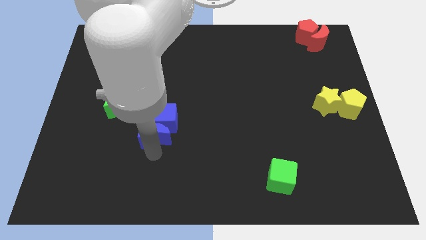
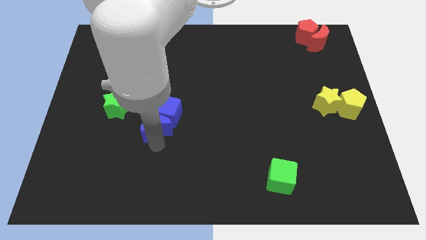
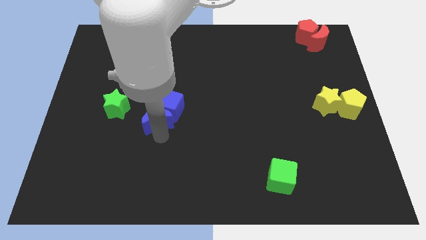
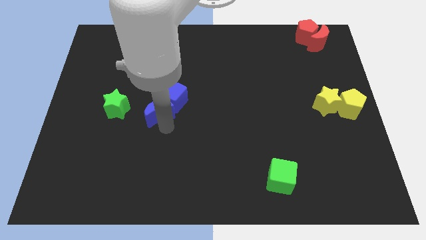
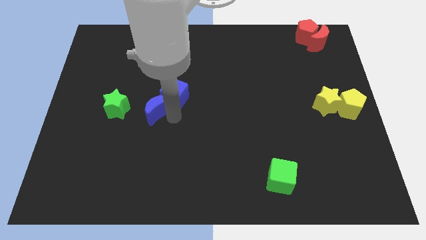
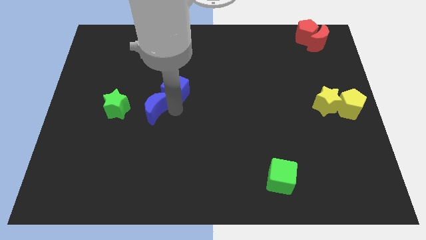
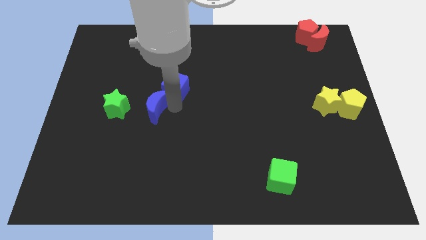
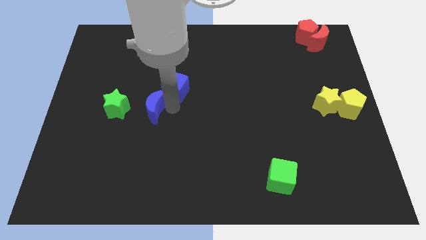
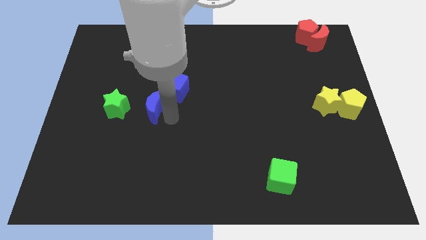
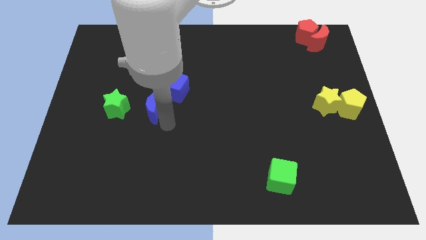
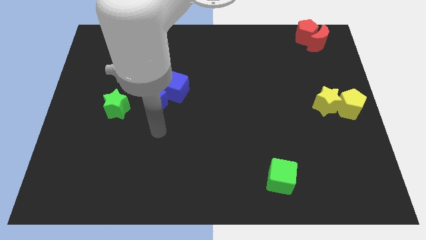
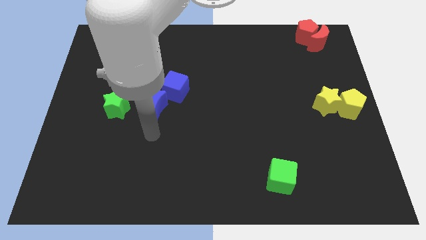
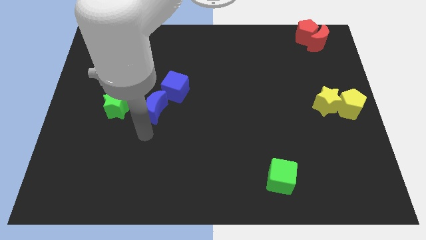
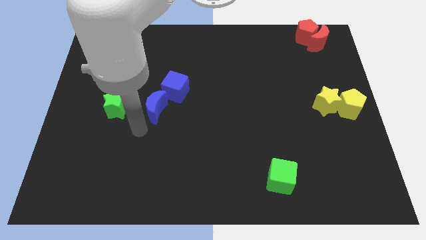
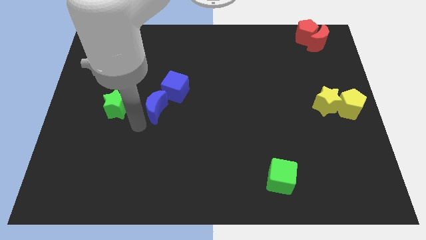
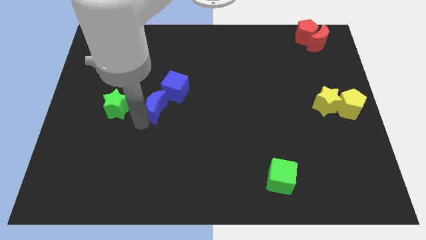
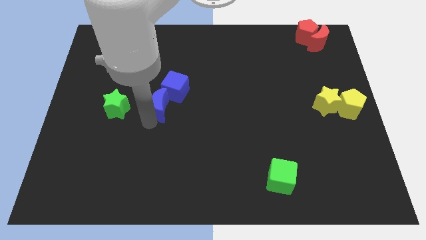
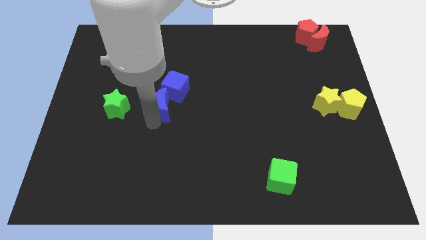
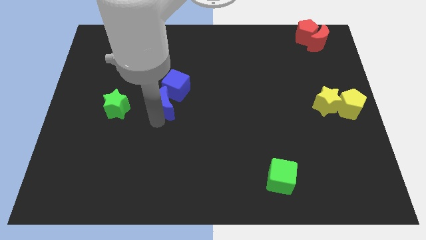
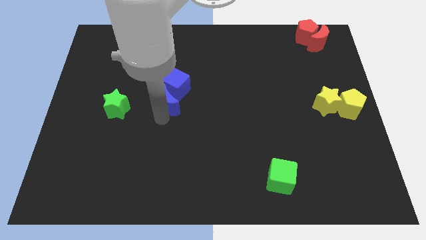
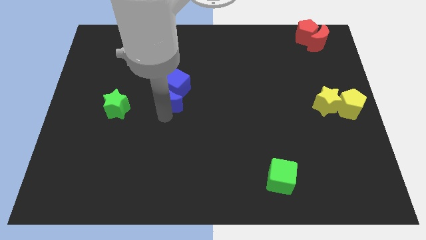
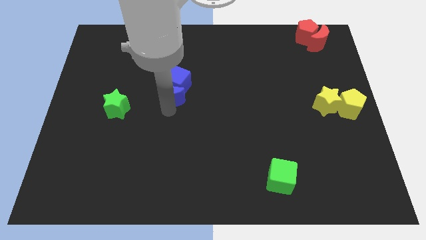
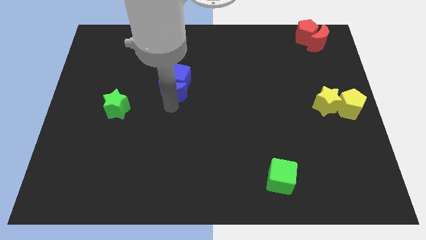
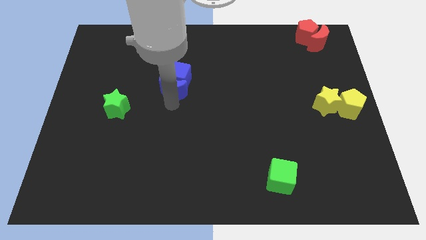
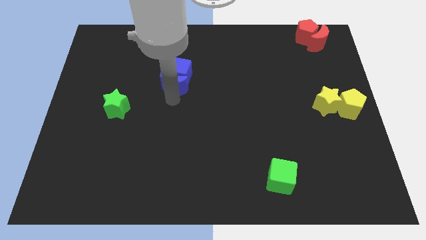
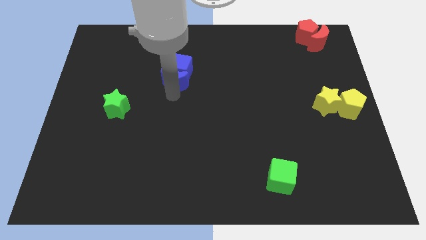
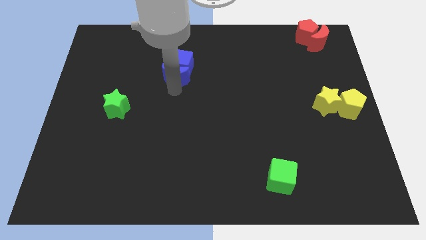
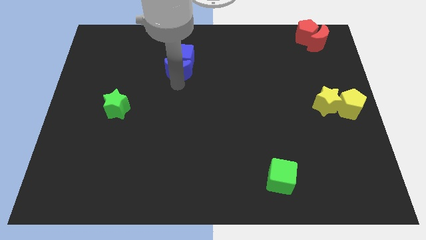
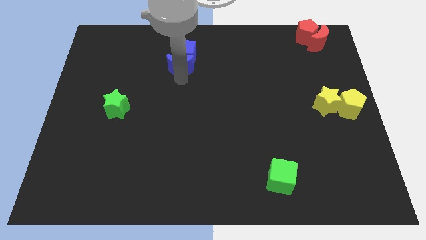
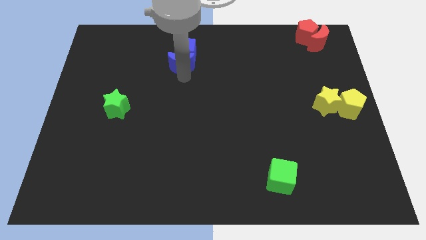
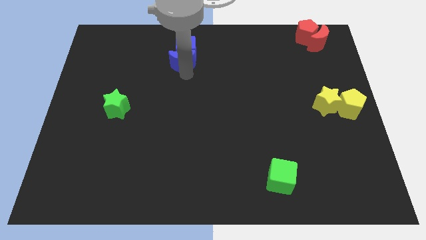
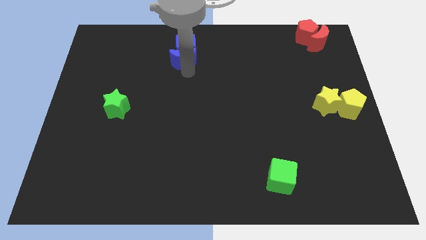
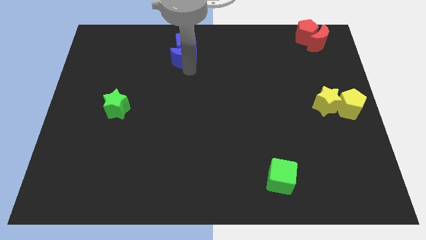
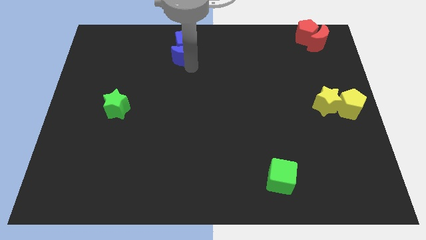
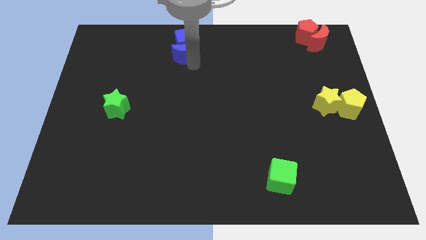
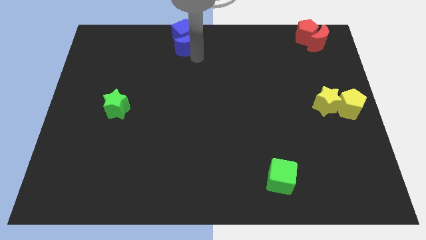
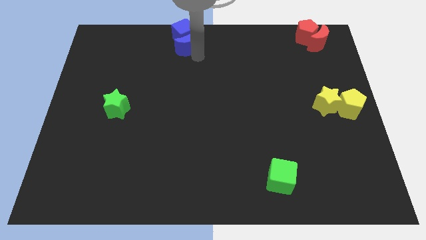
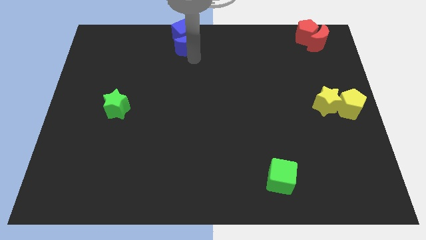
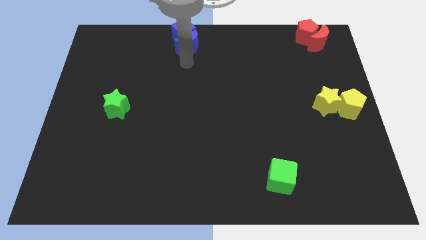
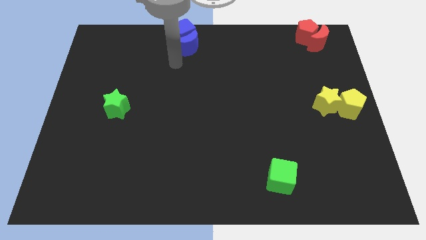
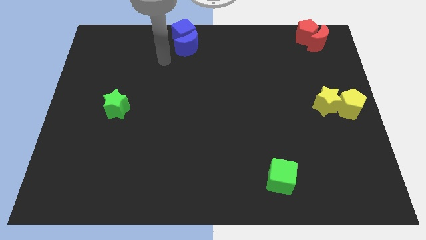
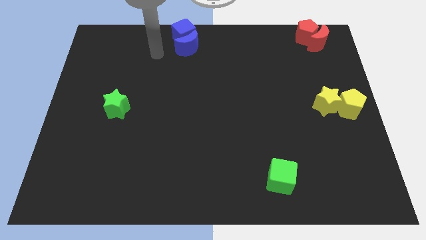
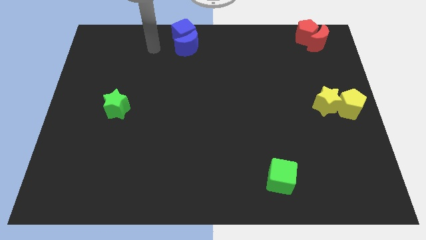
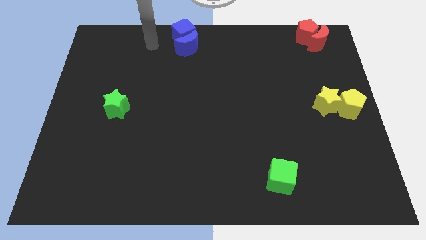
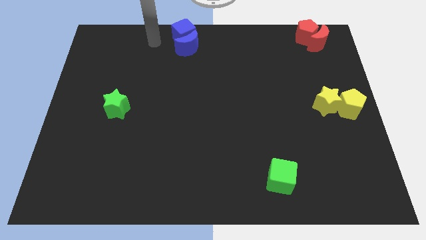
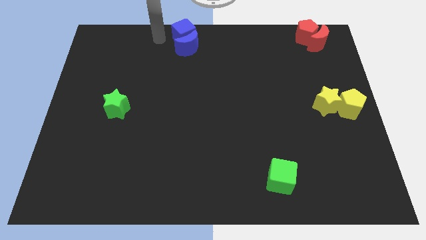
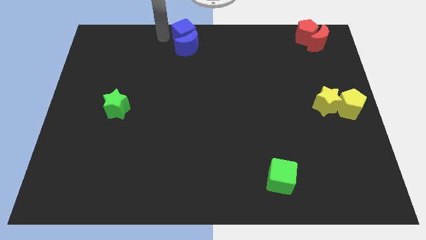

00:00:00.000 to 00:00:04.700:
push the blue cube and blue crescent to the top center

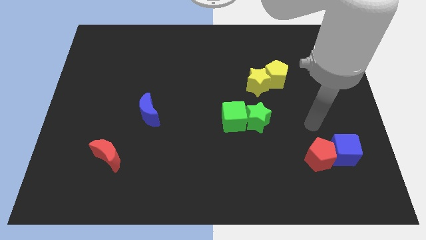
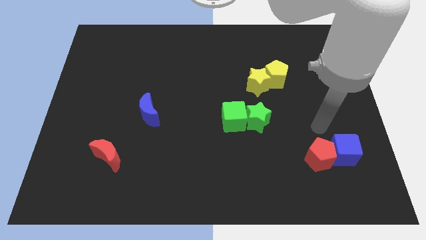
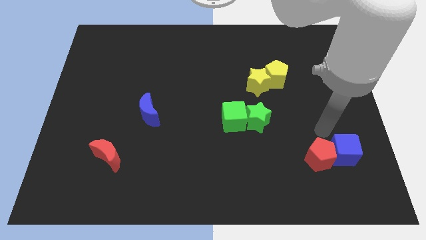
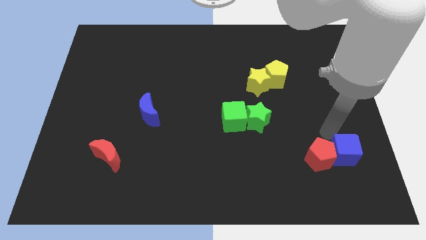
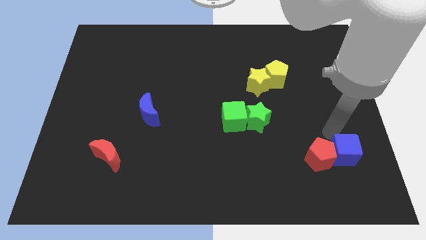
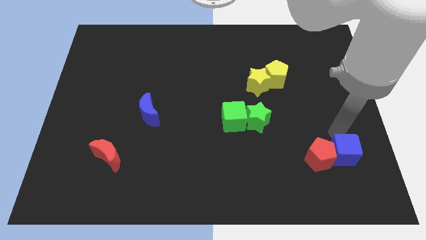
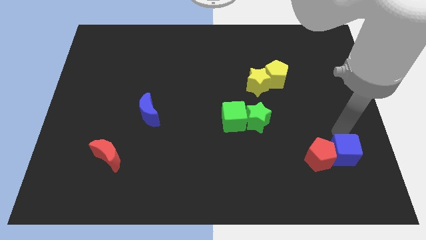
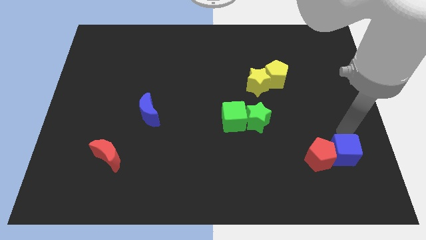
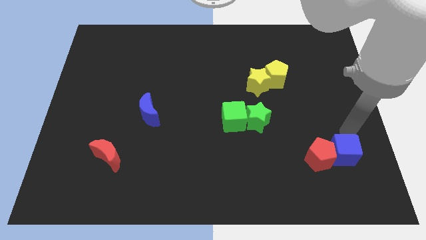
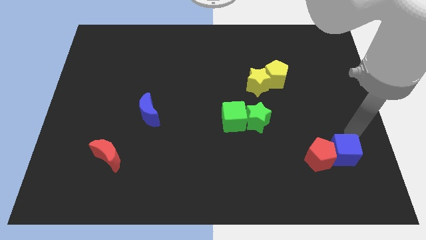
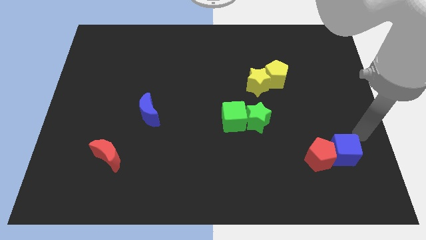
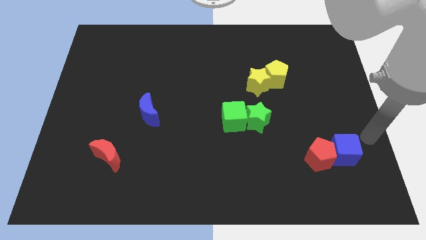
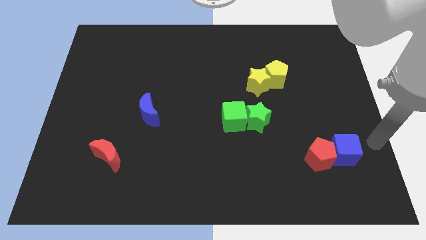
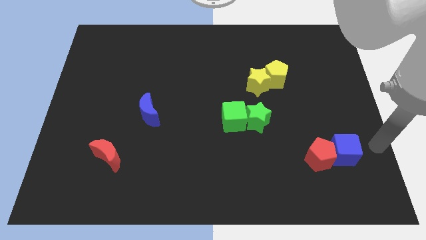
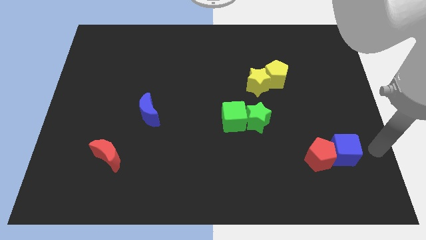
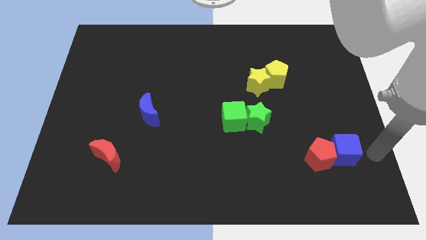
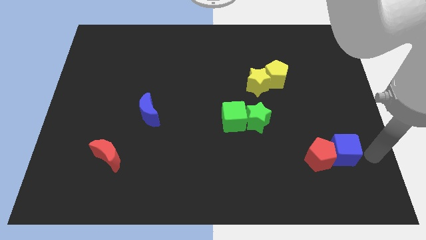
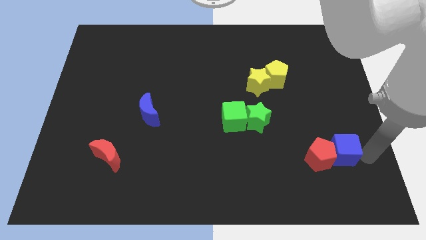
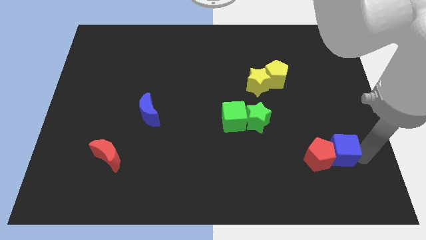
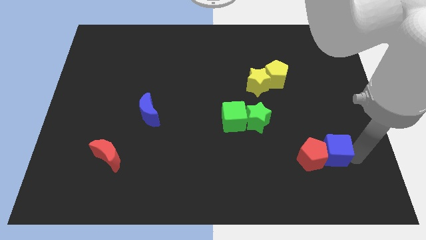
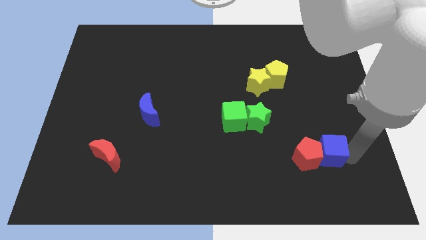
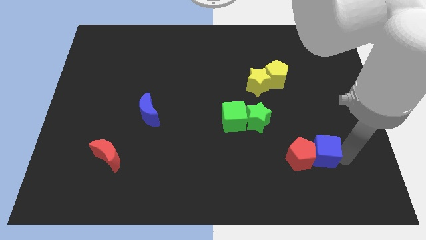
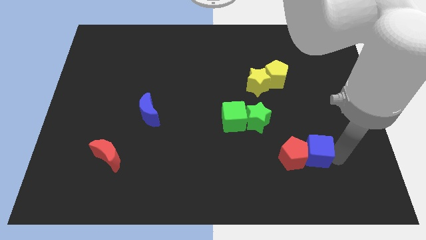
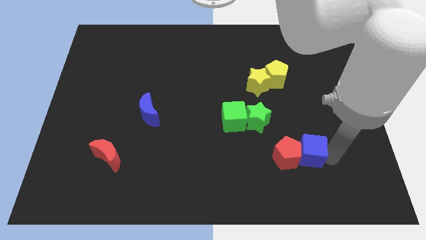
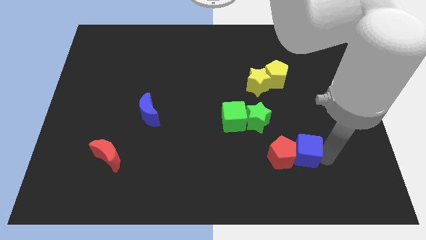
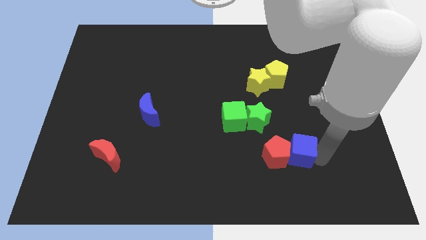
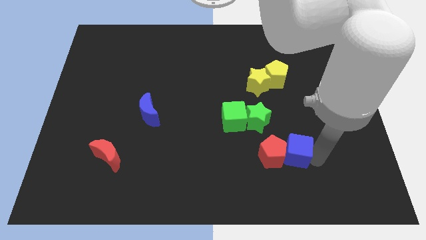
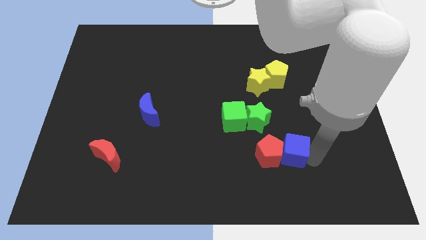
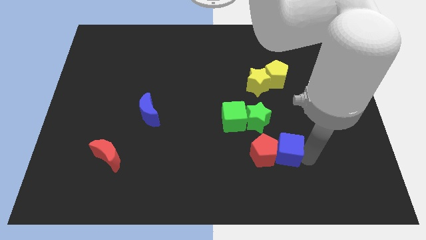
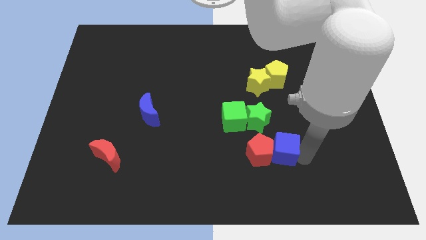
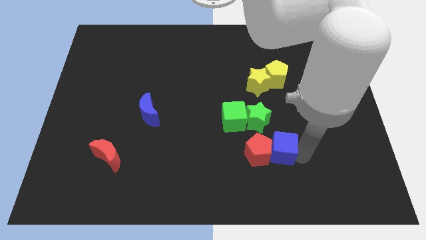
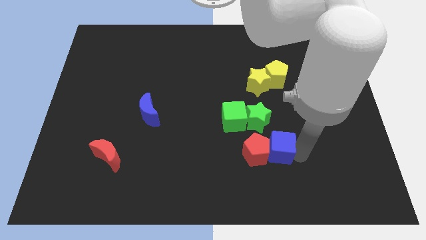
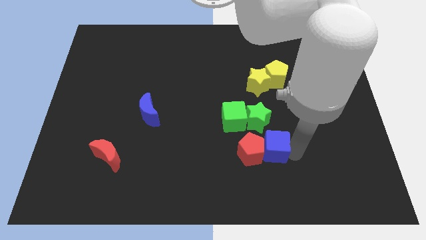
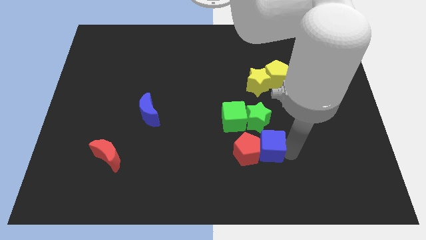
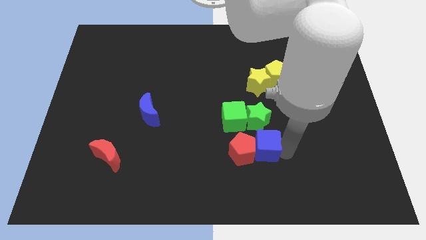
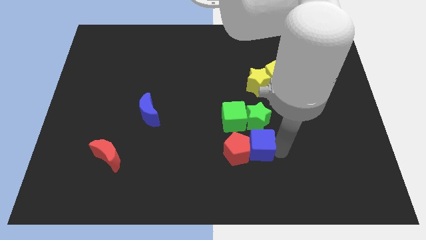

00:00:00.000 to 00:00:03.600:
move the blue cube along with red pentagon below the green blocks

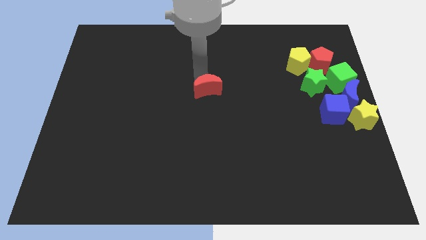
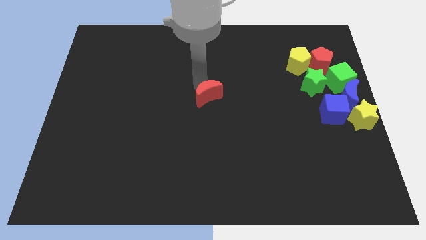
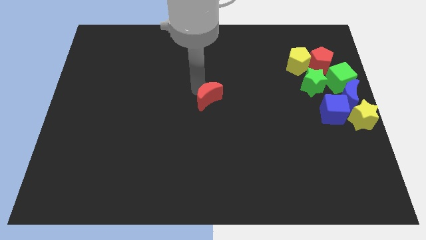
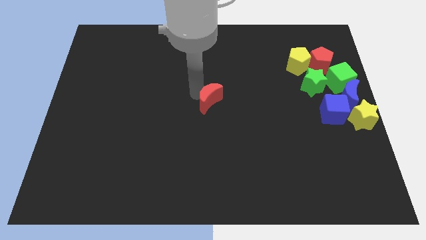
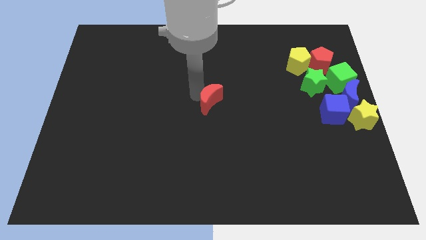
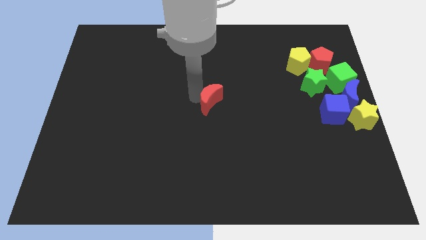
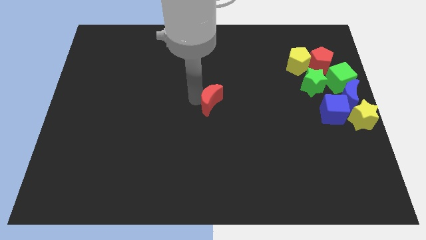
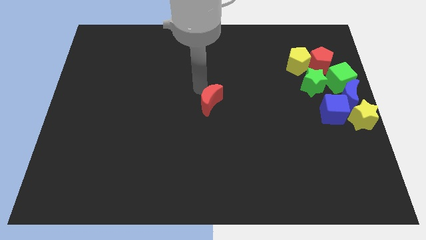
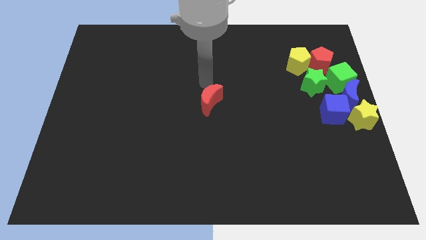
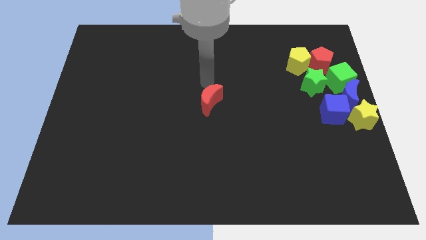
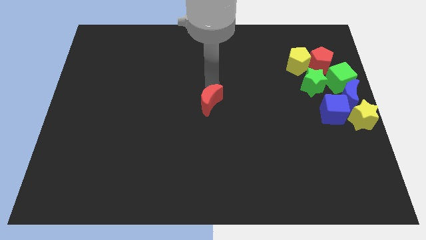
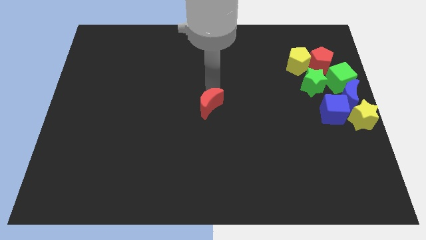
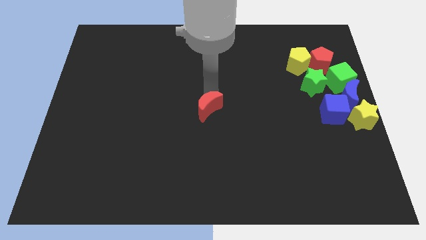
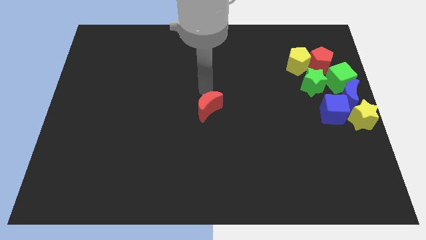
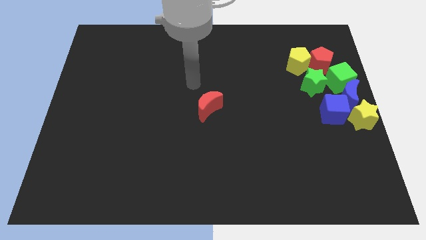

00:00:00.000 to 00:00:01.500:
push the red moon downward
